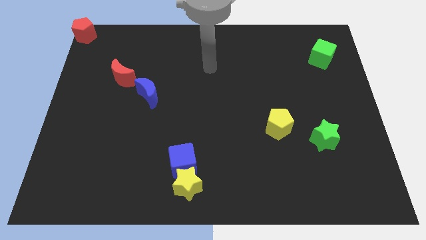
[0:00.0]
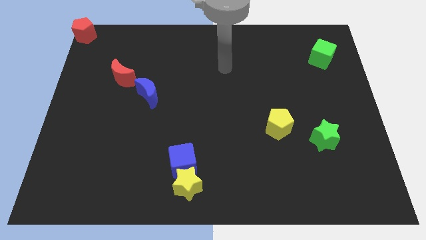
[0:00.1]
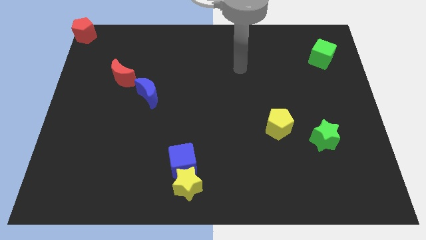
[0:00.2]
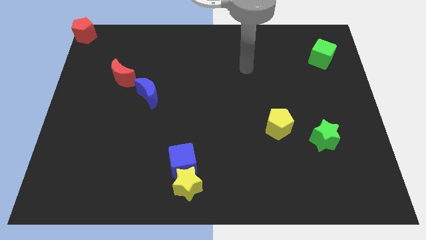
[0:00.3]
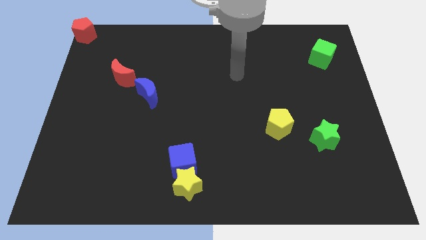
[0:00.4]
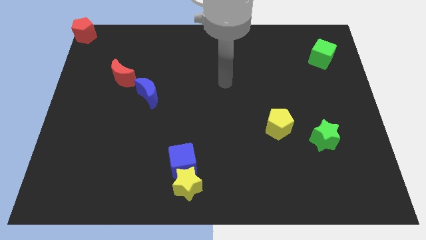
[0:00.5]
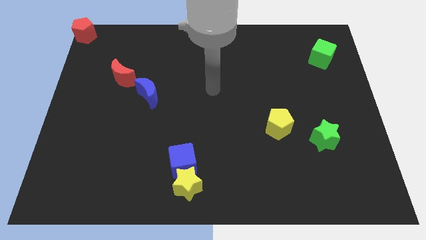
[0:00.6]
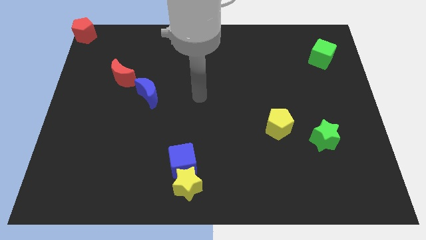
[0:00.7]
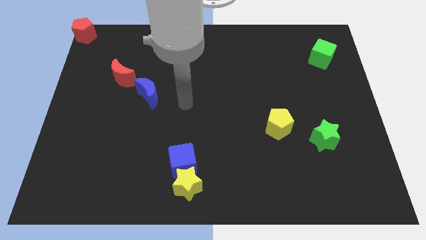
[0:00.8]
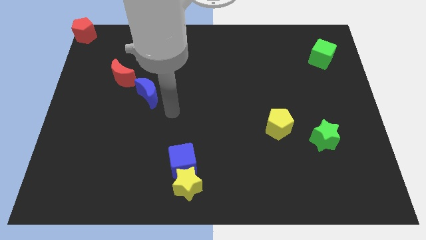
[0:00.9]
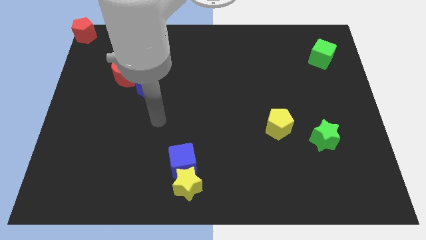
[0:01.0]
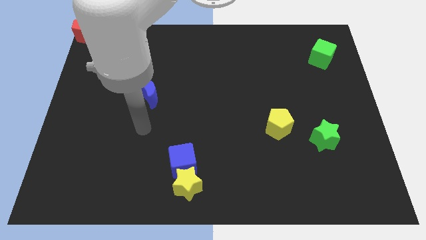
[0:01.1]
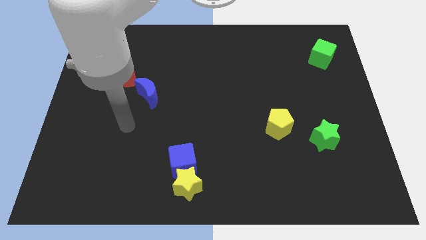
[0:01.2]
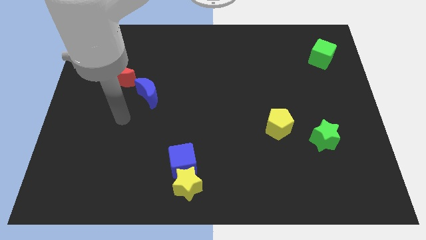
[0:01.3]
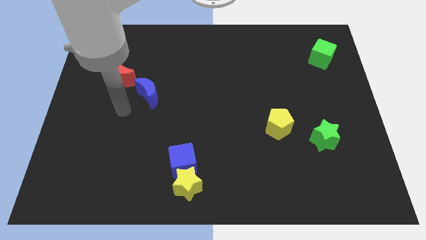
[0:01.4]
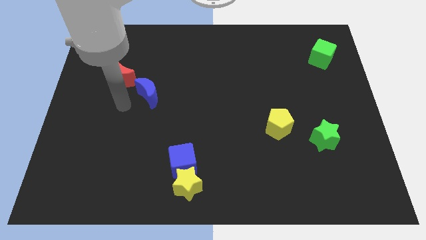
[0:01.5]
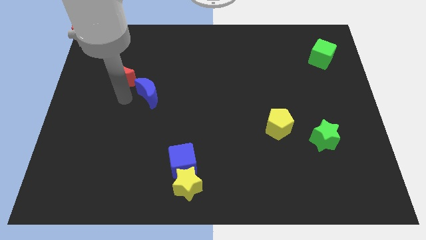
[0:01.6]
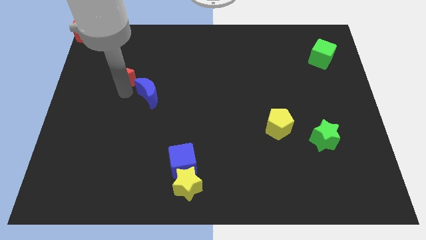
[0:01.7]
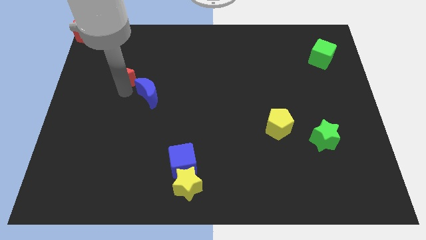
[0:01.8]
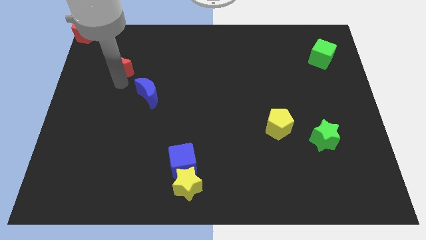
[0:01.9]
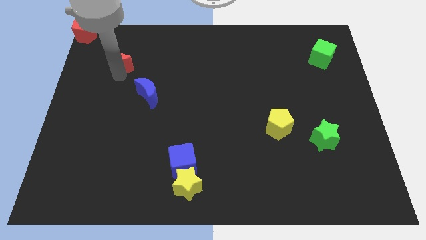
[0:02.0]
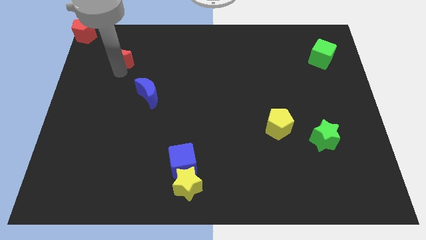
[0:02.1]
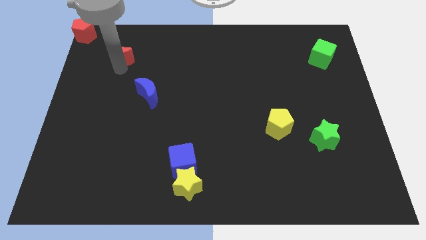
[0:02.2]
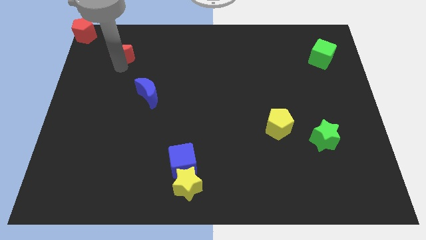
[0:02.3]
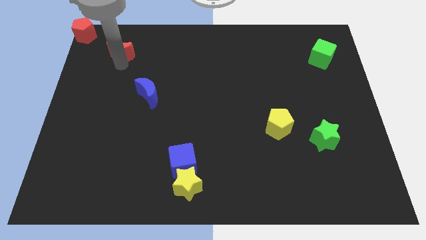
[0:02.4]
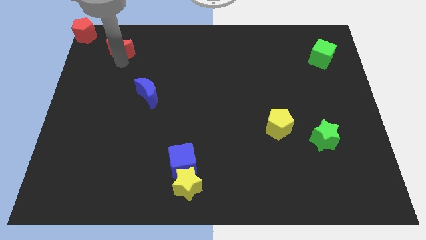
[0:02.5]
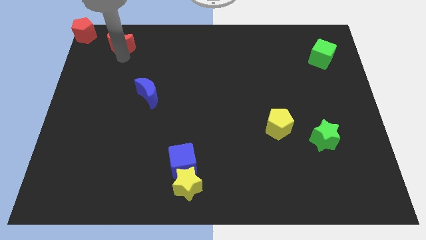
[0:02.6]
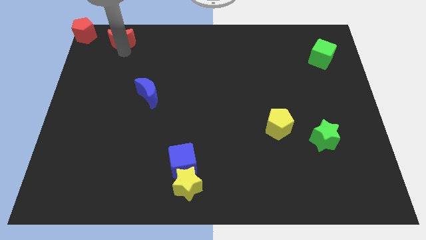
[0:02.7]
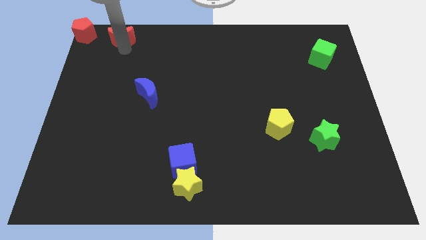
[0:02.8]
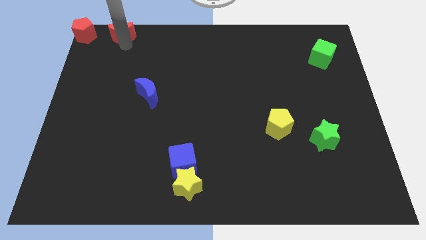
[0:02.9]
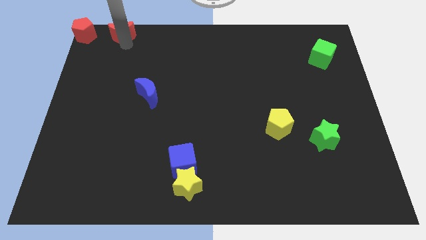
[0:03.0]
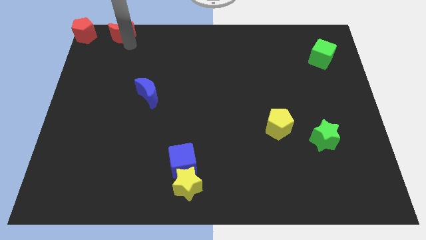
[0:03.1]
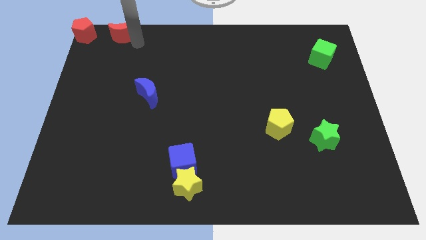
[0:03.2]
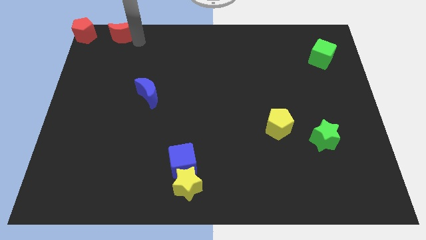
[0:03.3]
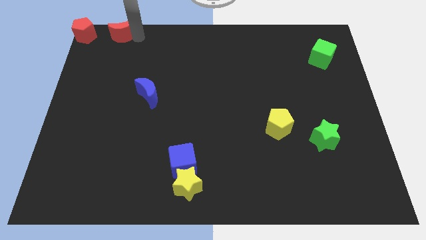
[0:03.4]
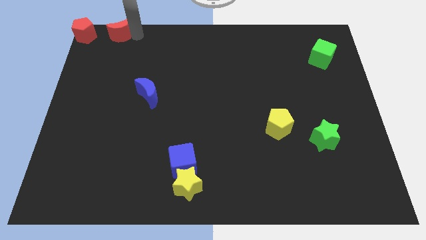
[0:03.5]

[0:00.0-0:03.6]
place the red moon right to the red pentagon

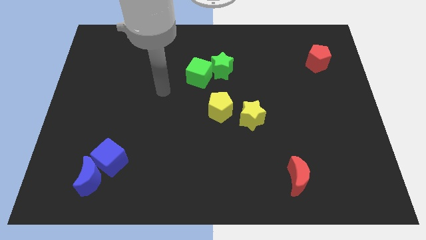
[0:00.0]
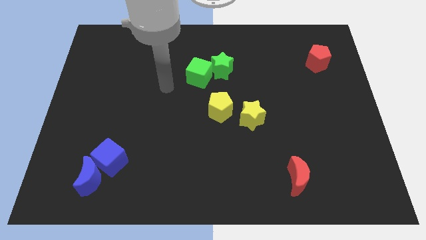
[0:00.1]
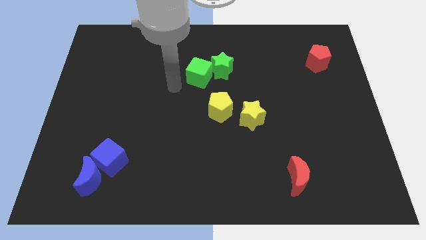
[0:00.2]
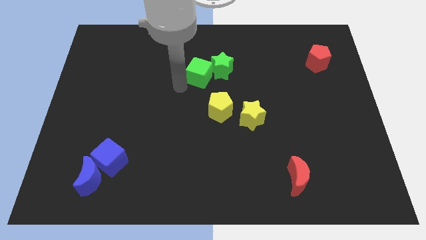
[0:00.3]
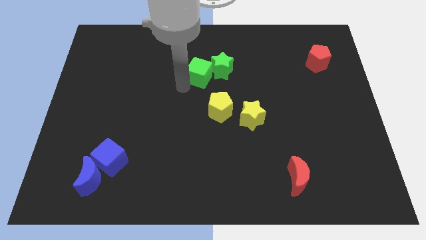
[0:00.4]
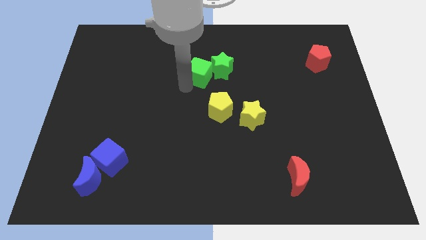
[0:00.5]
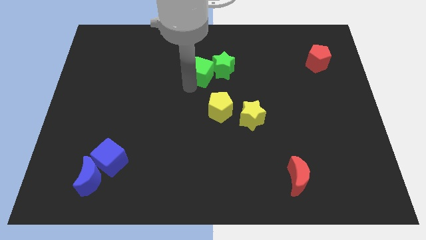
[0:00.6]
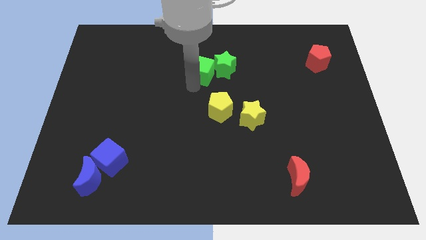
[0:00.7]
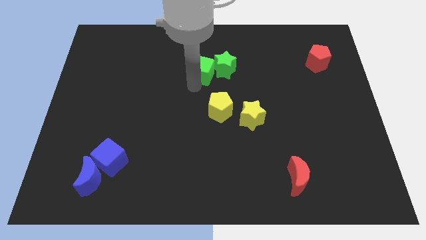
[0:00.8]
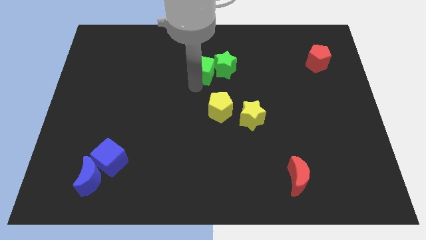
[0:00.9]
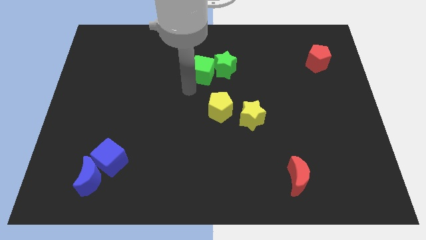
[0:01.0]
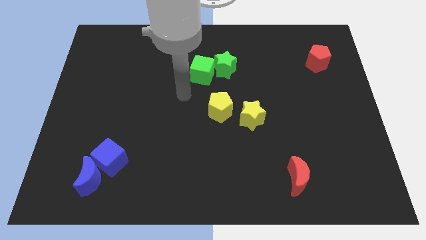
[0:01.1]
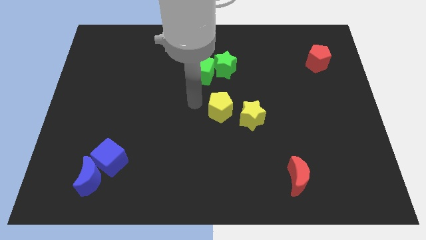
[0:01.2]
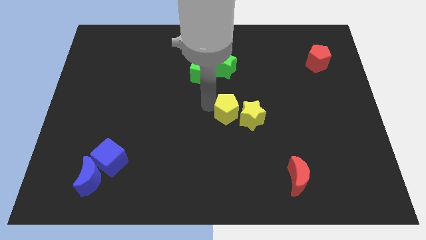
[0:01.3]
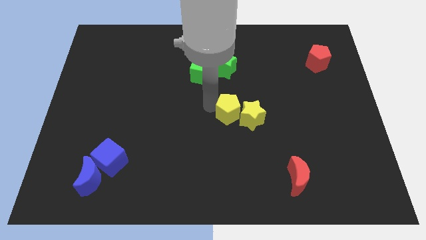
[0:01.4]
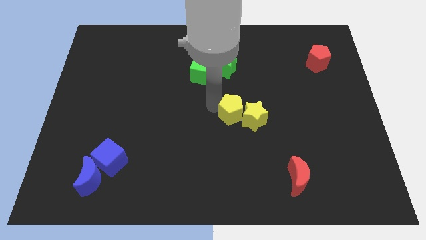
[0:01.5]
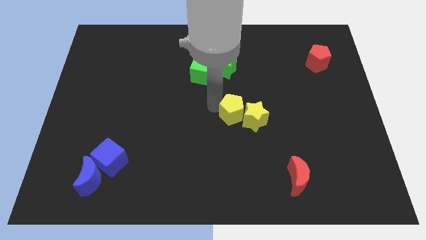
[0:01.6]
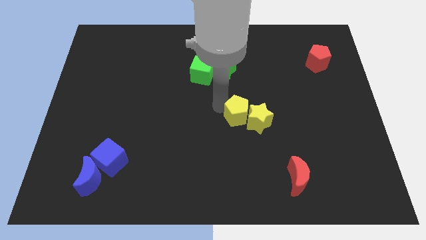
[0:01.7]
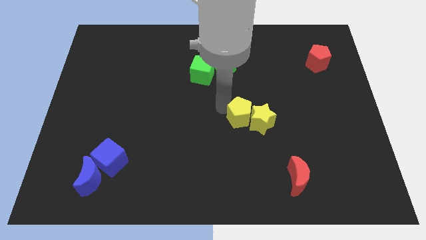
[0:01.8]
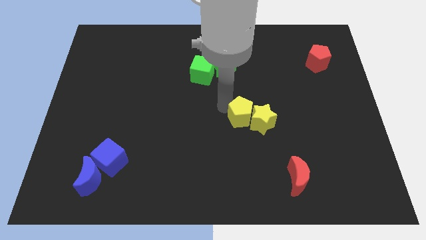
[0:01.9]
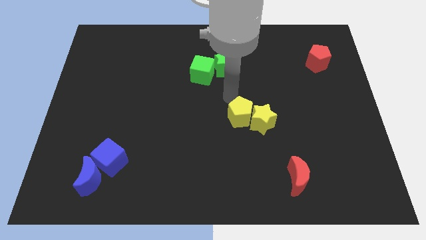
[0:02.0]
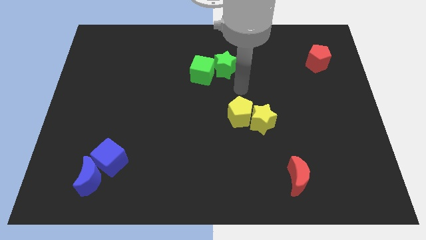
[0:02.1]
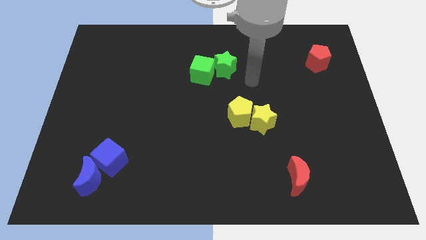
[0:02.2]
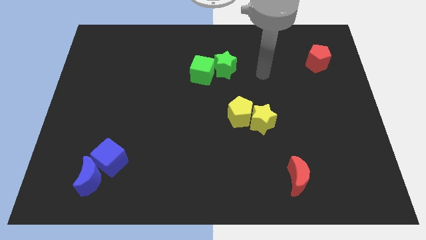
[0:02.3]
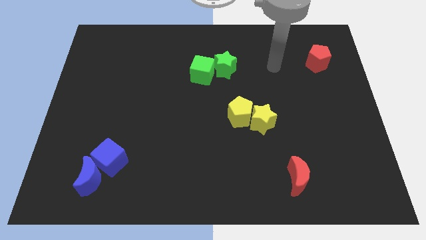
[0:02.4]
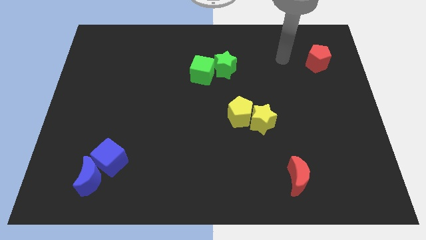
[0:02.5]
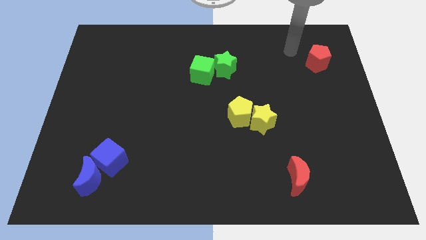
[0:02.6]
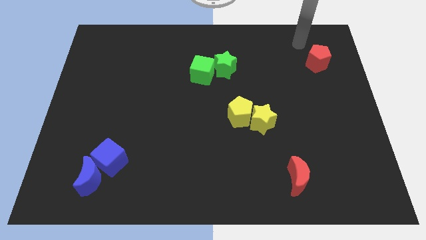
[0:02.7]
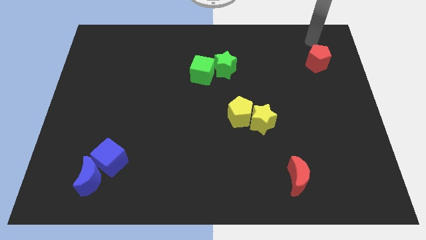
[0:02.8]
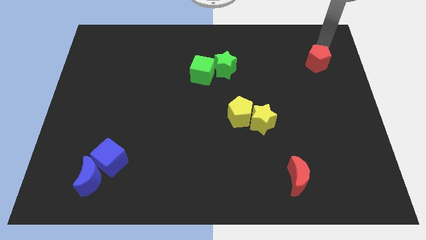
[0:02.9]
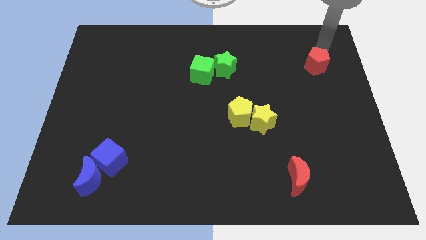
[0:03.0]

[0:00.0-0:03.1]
move the green blocks and the yellow blocks away from each other

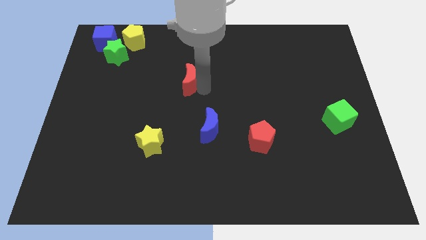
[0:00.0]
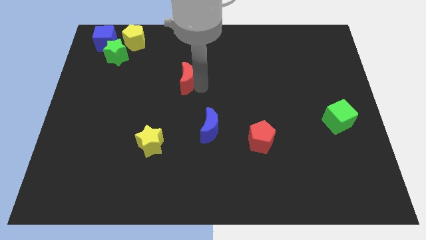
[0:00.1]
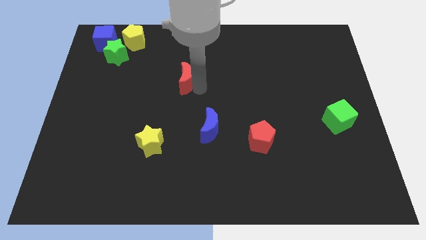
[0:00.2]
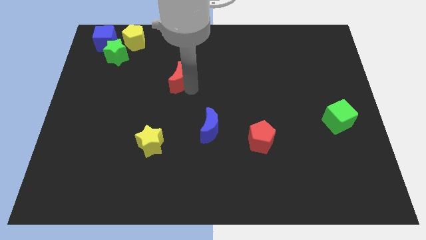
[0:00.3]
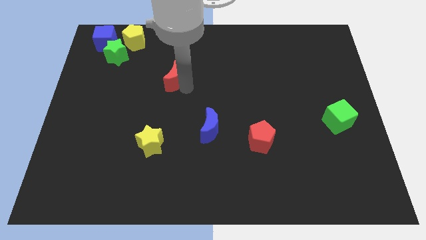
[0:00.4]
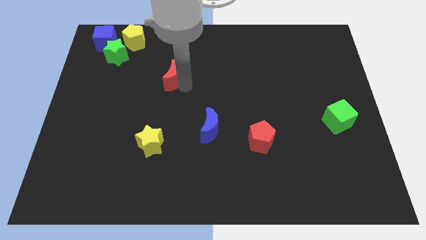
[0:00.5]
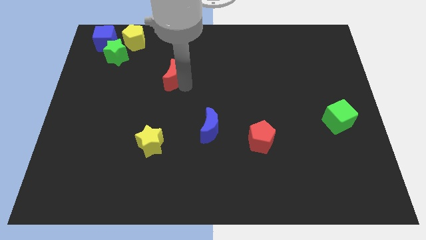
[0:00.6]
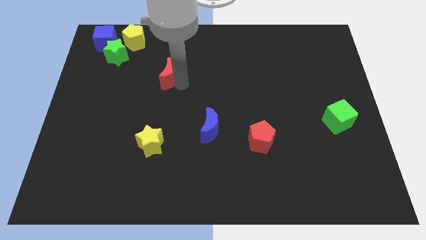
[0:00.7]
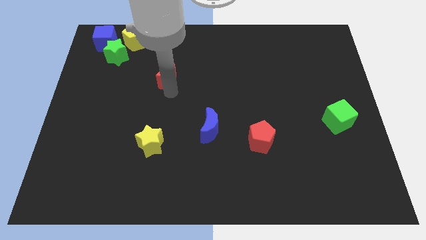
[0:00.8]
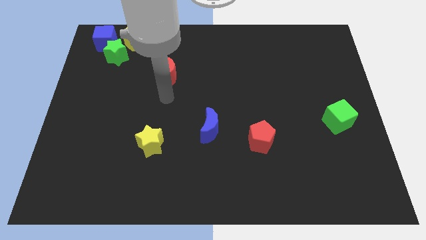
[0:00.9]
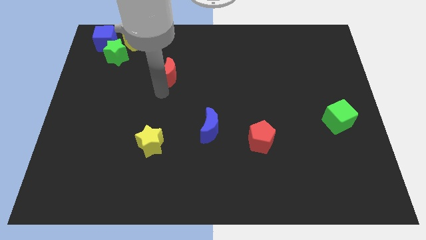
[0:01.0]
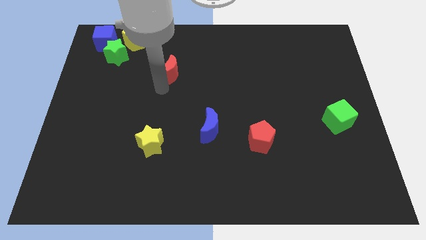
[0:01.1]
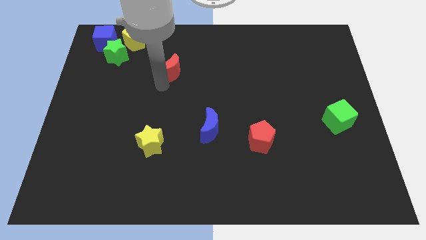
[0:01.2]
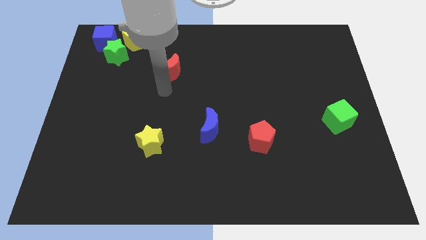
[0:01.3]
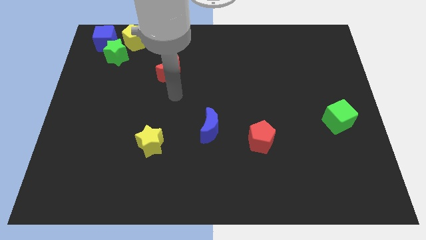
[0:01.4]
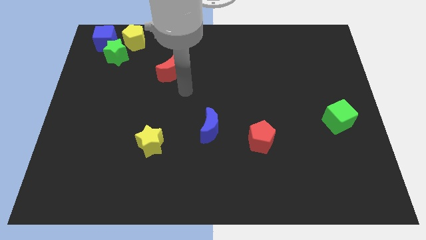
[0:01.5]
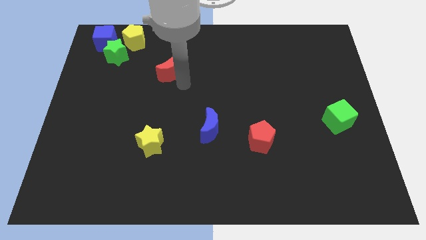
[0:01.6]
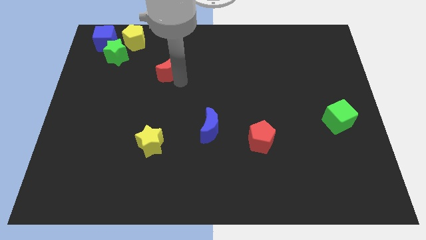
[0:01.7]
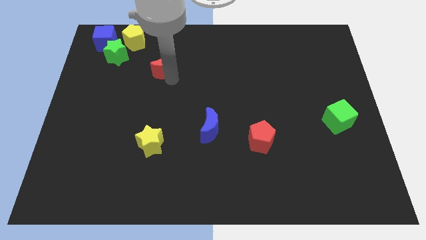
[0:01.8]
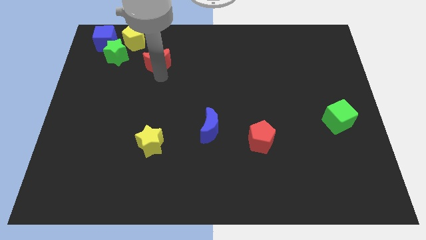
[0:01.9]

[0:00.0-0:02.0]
place the red crescent vertically above the yellow star
